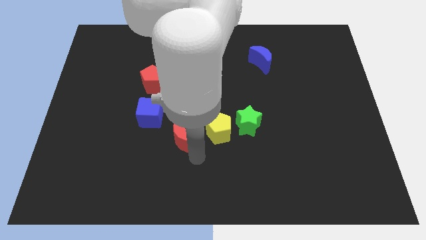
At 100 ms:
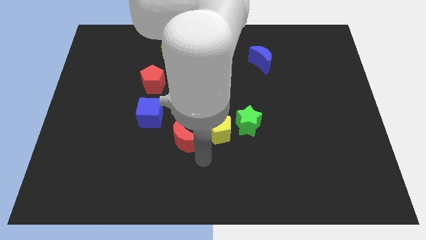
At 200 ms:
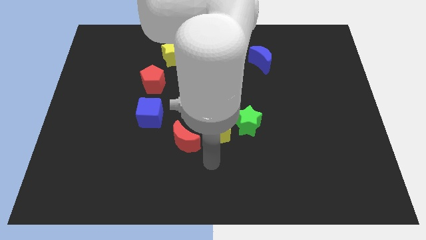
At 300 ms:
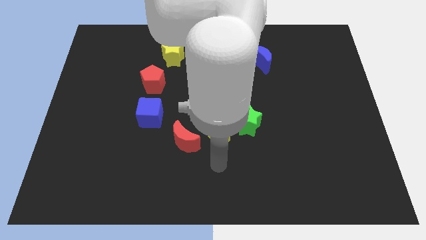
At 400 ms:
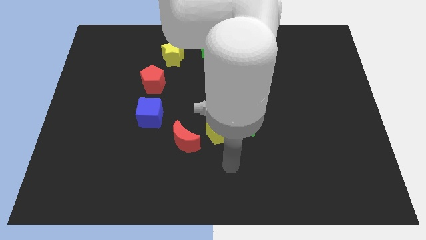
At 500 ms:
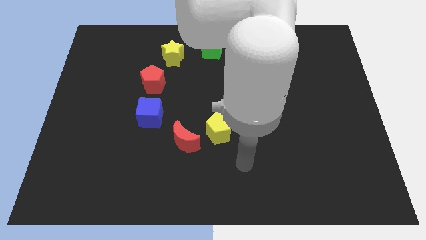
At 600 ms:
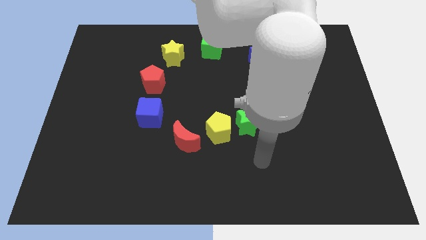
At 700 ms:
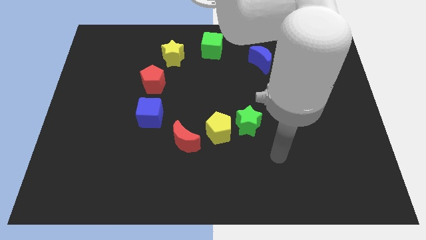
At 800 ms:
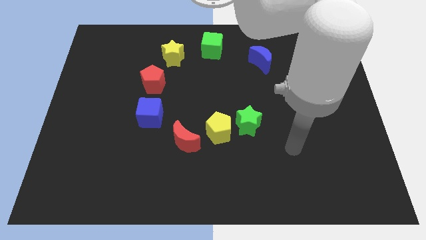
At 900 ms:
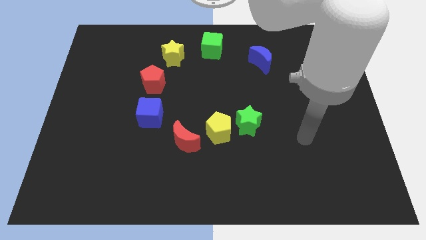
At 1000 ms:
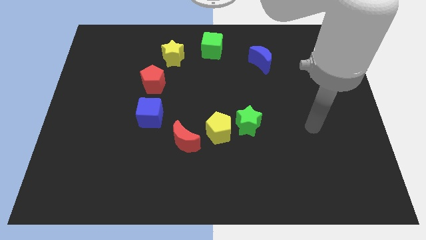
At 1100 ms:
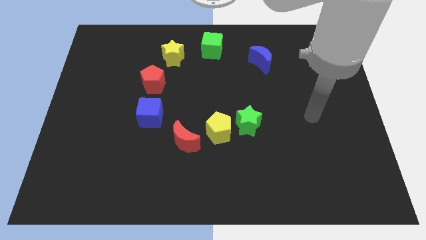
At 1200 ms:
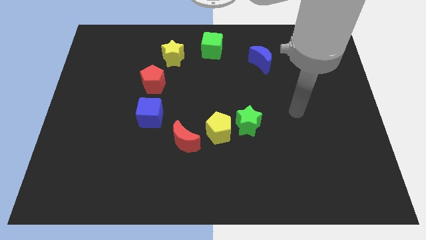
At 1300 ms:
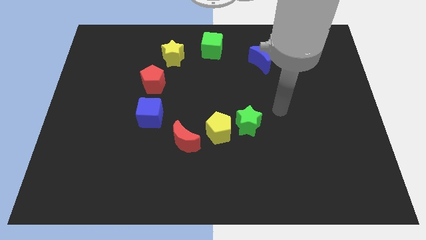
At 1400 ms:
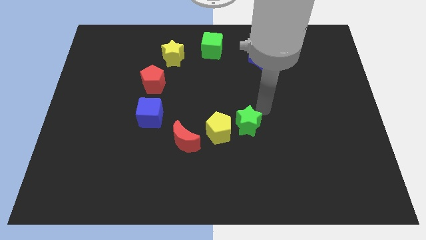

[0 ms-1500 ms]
move your hand away from the red crescent

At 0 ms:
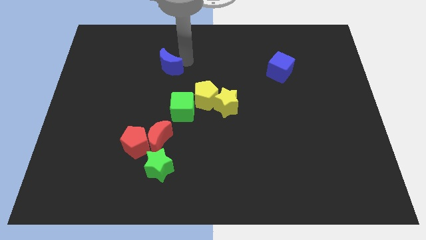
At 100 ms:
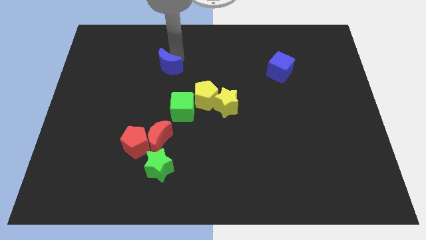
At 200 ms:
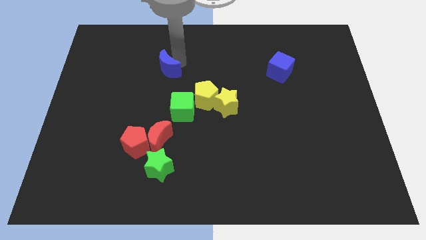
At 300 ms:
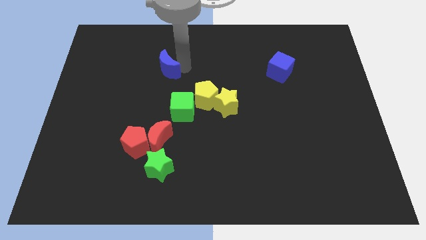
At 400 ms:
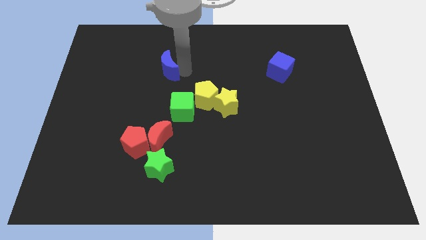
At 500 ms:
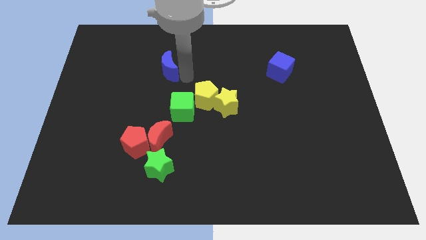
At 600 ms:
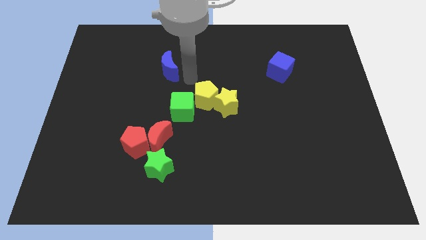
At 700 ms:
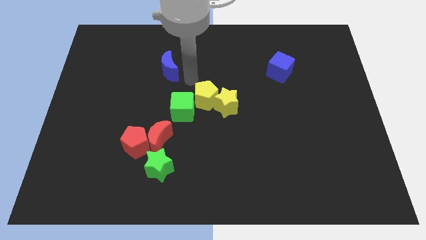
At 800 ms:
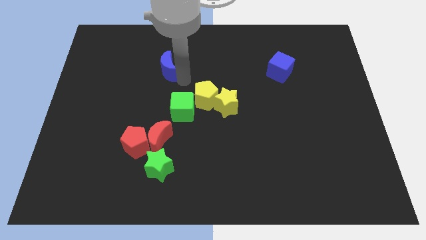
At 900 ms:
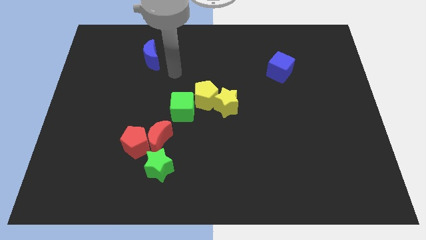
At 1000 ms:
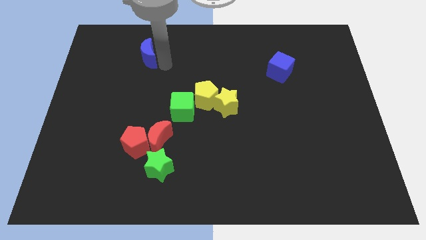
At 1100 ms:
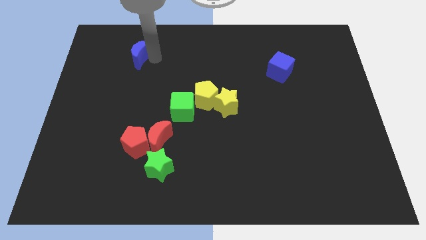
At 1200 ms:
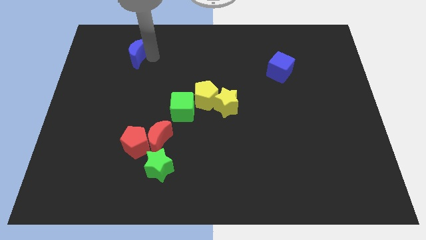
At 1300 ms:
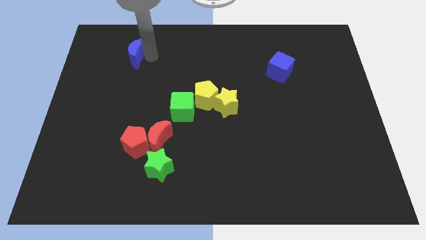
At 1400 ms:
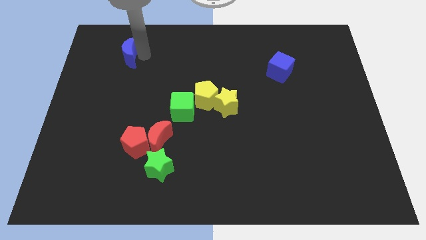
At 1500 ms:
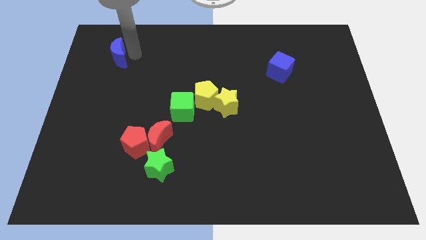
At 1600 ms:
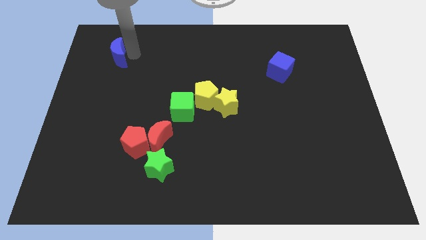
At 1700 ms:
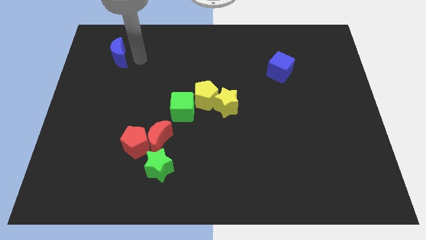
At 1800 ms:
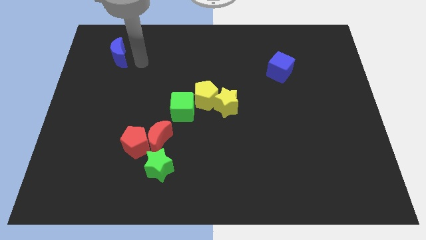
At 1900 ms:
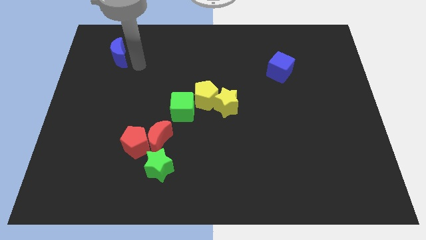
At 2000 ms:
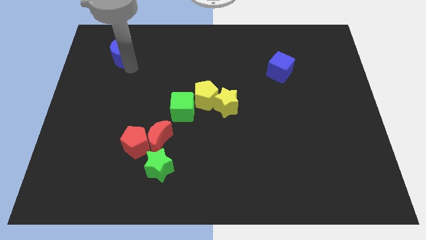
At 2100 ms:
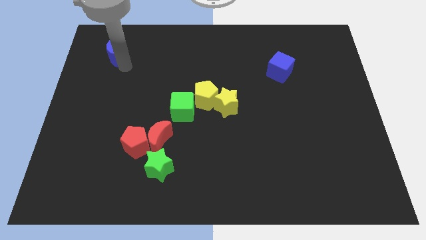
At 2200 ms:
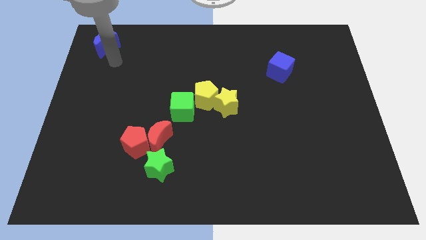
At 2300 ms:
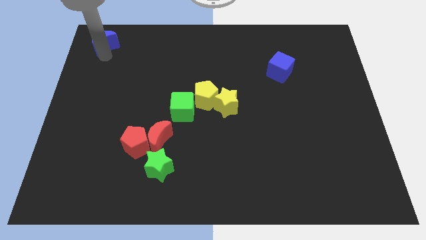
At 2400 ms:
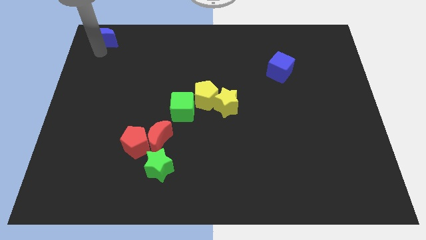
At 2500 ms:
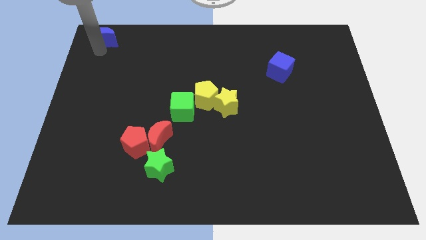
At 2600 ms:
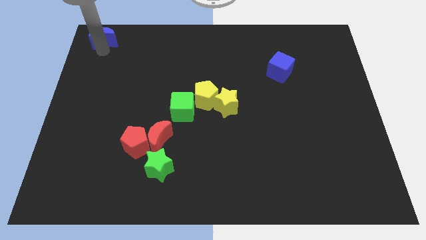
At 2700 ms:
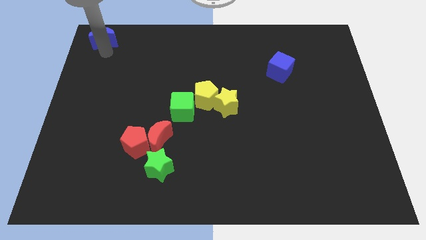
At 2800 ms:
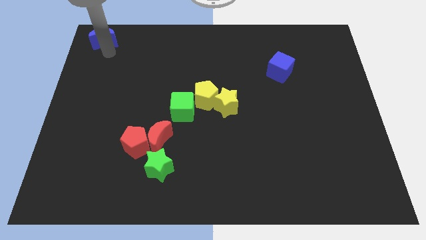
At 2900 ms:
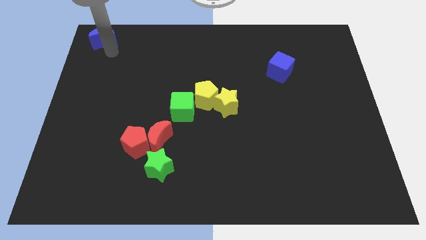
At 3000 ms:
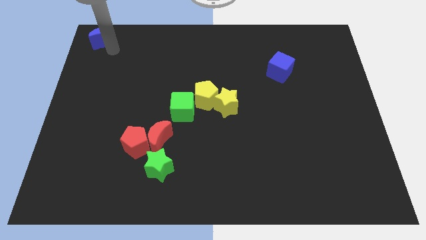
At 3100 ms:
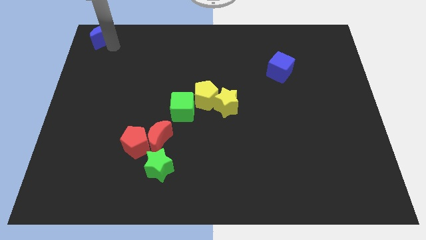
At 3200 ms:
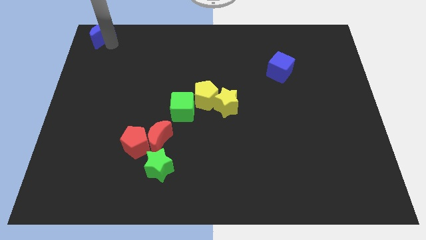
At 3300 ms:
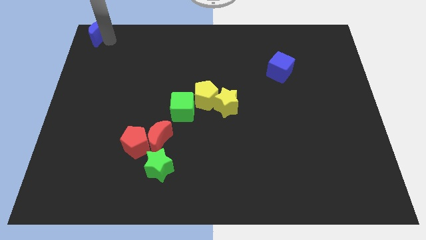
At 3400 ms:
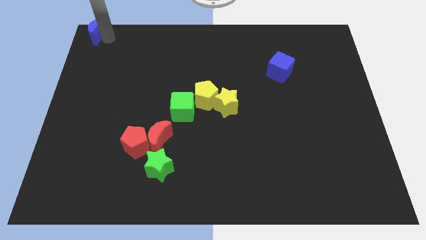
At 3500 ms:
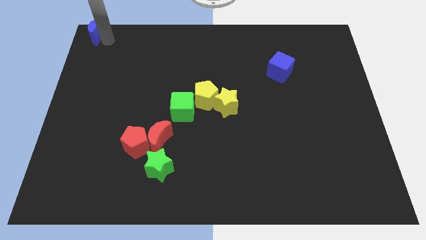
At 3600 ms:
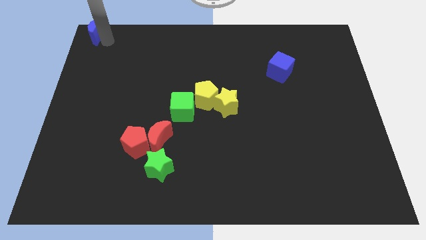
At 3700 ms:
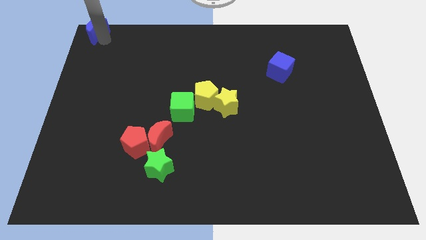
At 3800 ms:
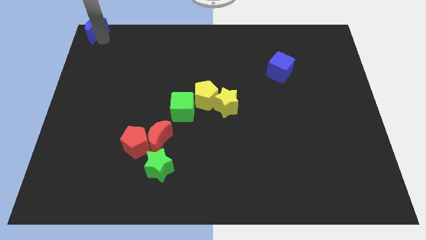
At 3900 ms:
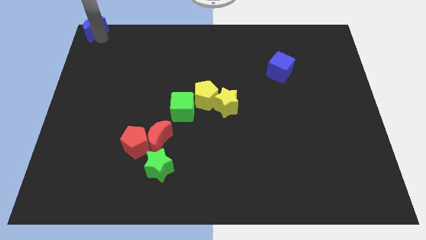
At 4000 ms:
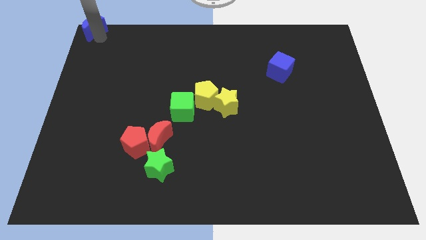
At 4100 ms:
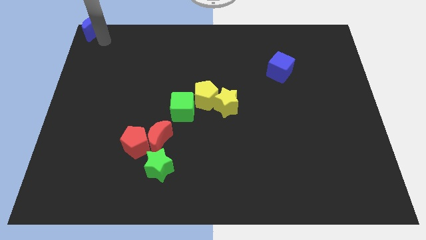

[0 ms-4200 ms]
push the blue crescent to the top left to the board

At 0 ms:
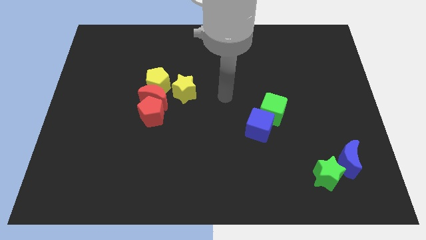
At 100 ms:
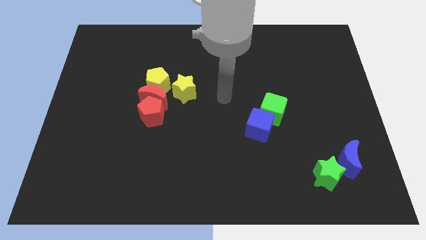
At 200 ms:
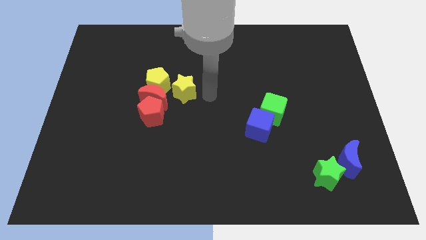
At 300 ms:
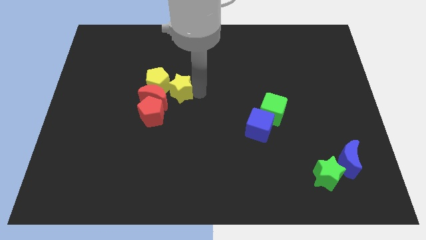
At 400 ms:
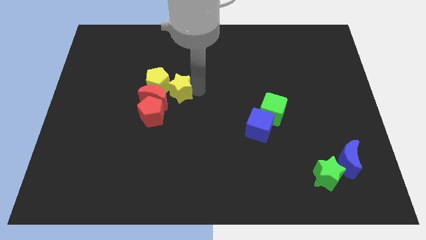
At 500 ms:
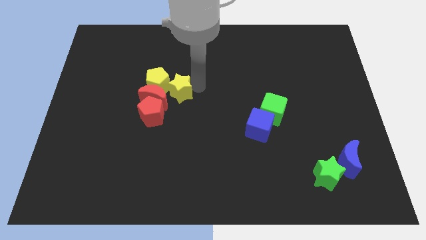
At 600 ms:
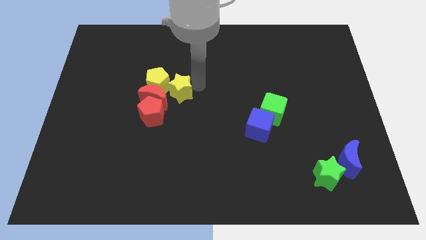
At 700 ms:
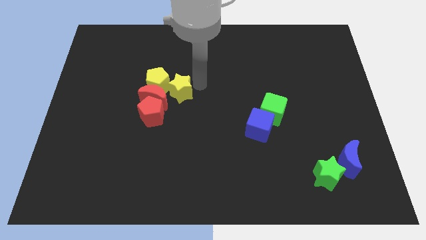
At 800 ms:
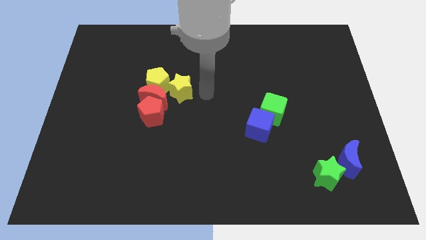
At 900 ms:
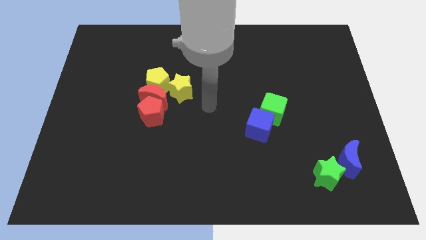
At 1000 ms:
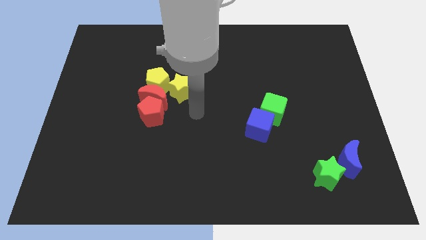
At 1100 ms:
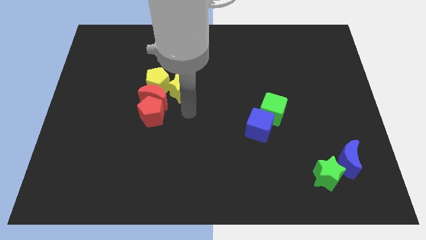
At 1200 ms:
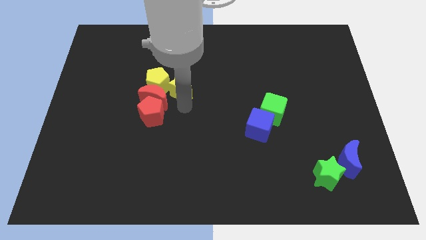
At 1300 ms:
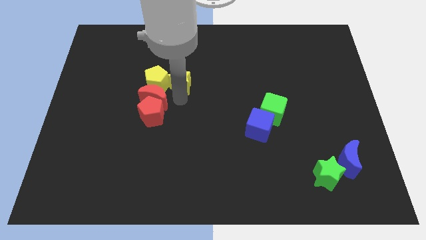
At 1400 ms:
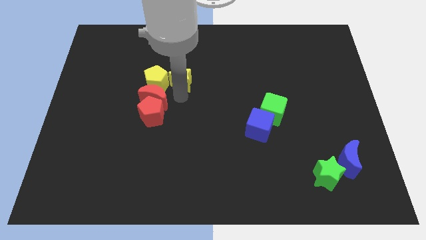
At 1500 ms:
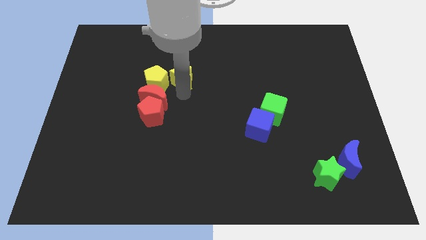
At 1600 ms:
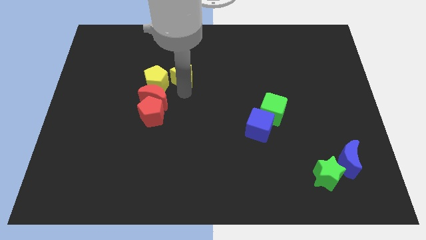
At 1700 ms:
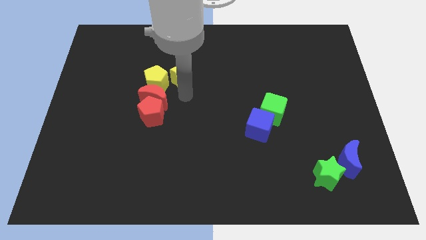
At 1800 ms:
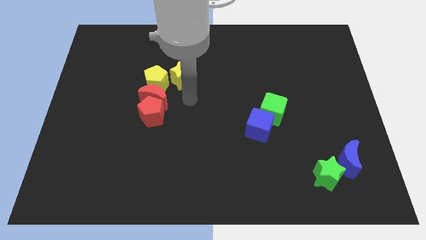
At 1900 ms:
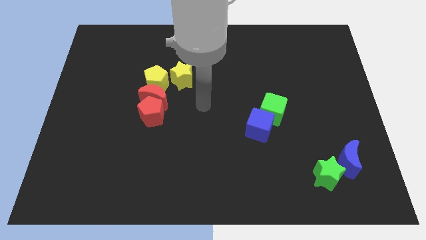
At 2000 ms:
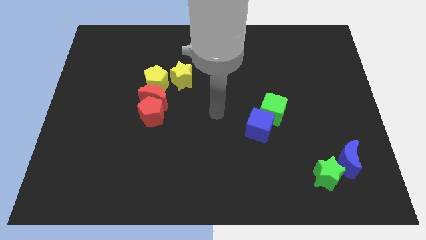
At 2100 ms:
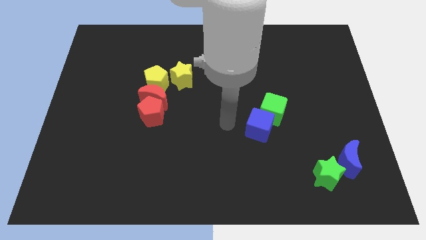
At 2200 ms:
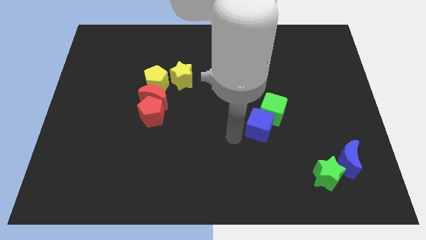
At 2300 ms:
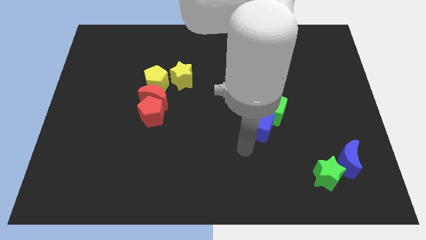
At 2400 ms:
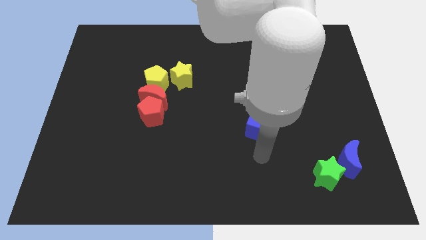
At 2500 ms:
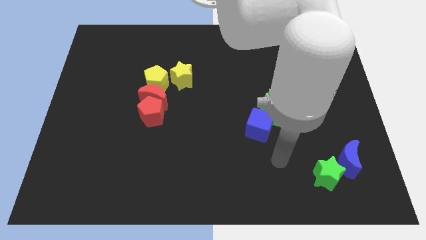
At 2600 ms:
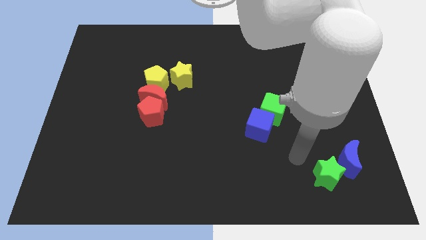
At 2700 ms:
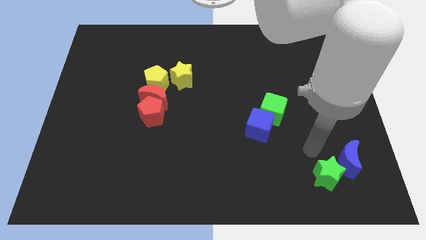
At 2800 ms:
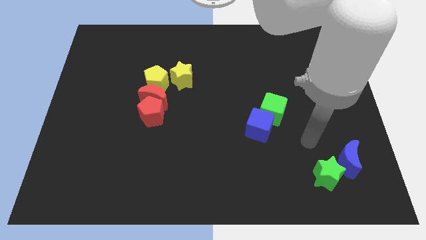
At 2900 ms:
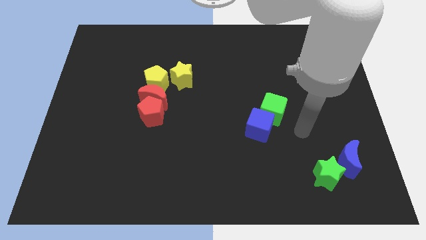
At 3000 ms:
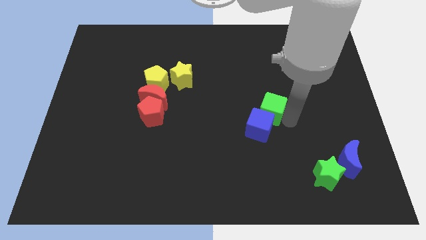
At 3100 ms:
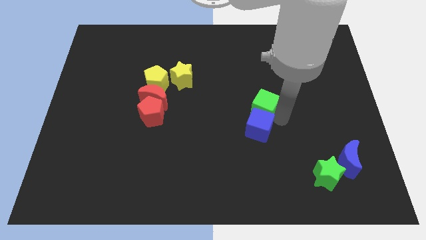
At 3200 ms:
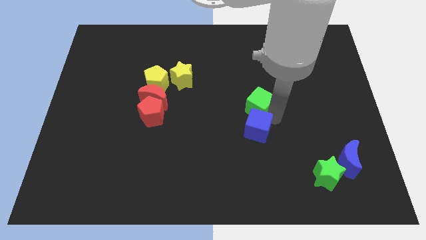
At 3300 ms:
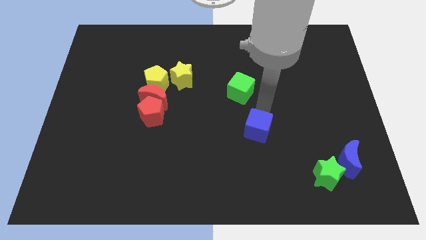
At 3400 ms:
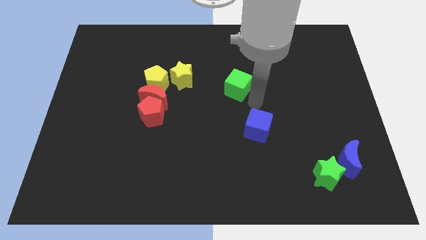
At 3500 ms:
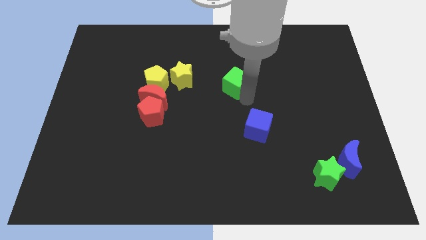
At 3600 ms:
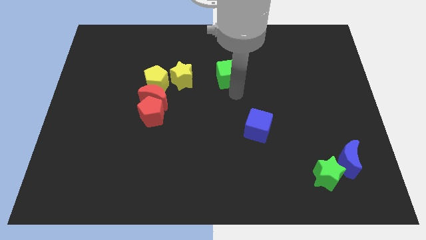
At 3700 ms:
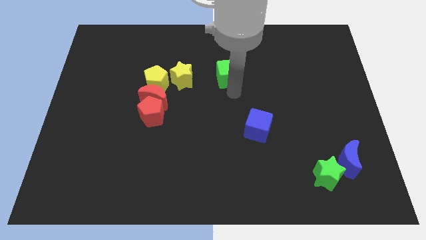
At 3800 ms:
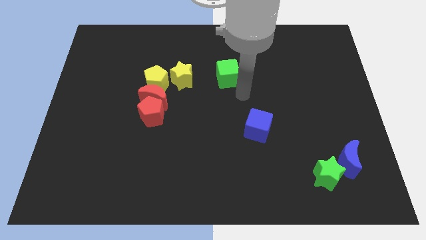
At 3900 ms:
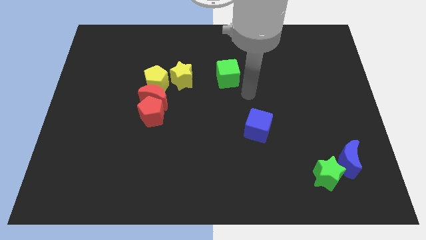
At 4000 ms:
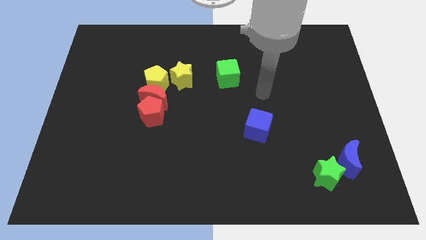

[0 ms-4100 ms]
move green cube right to the yellow star
